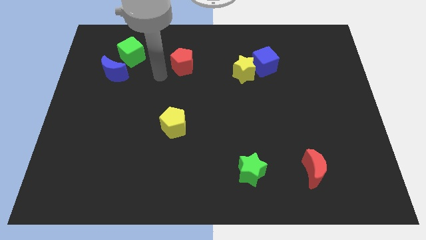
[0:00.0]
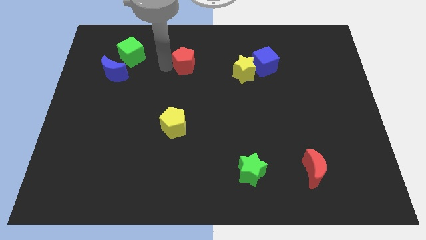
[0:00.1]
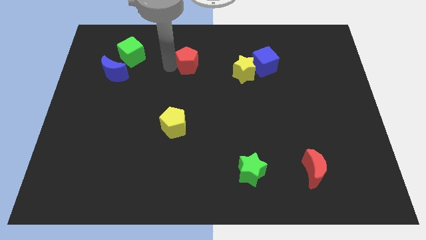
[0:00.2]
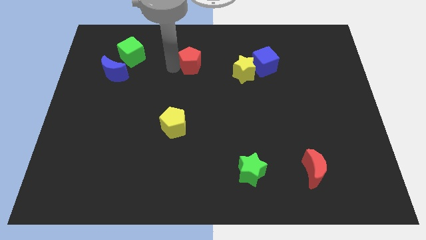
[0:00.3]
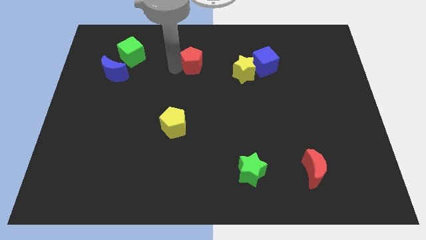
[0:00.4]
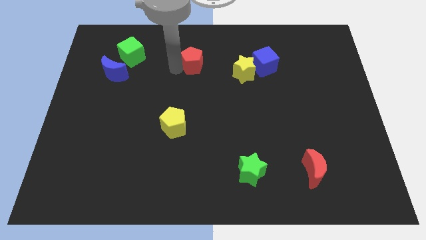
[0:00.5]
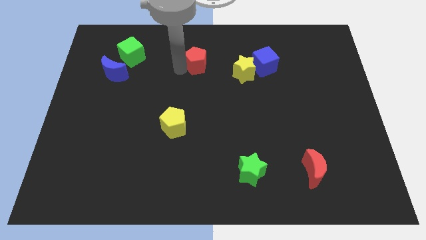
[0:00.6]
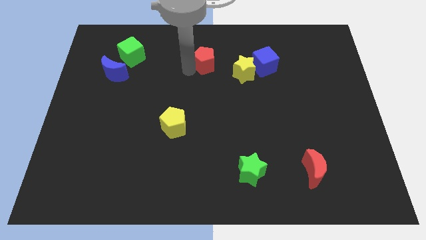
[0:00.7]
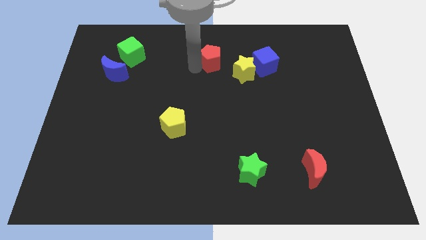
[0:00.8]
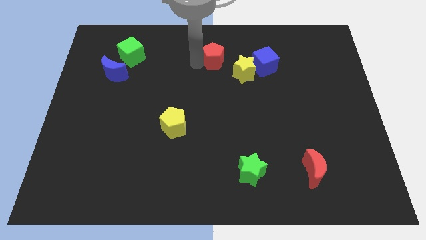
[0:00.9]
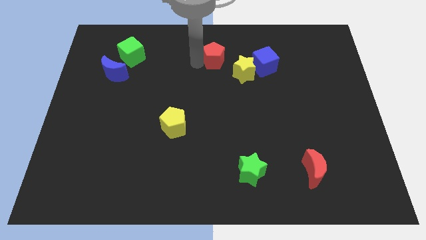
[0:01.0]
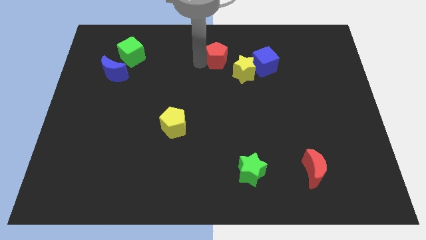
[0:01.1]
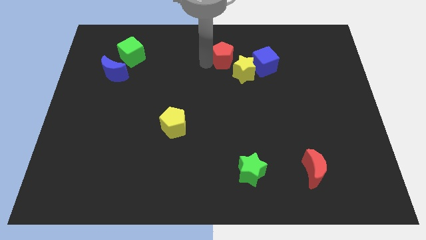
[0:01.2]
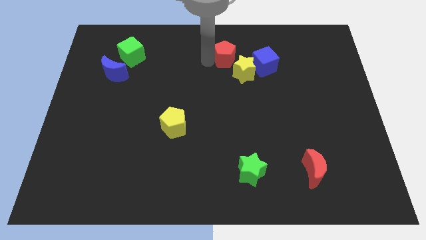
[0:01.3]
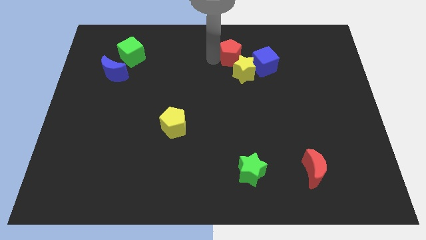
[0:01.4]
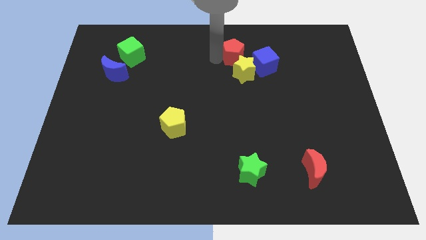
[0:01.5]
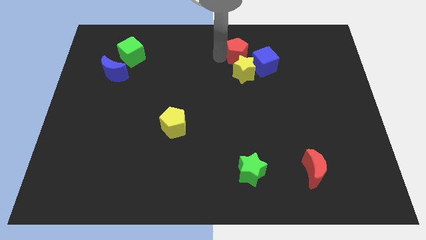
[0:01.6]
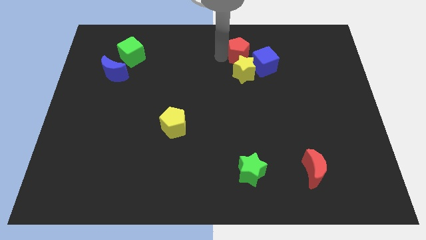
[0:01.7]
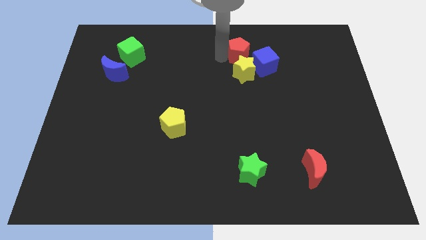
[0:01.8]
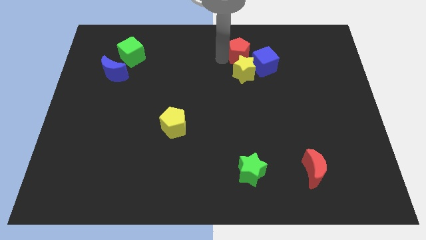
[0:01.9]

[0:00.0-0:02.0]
place the red pentagon on top of the yellow star

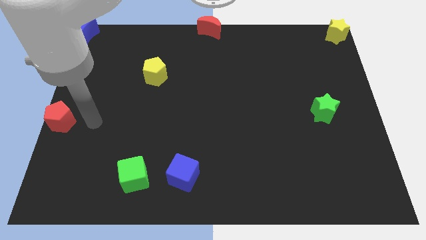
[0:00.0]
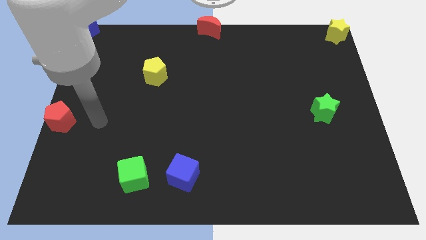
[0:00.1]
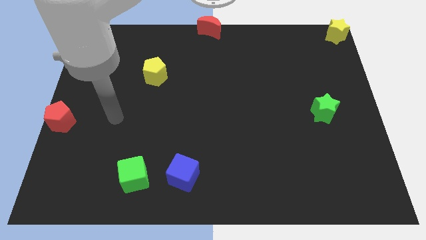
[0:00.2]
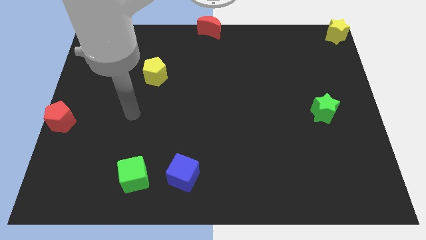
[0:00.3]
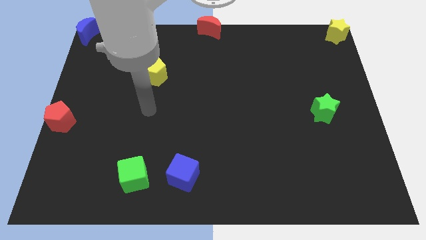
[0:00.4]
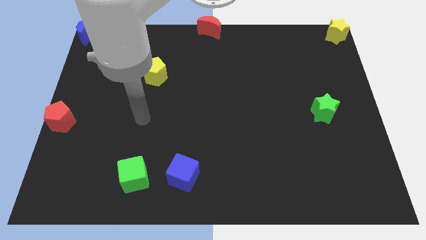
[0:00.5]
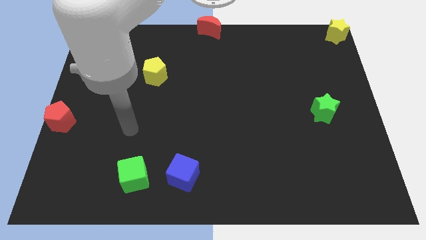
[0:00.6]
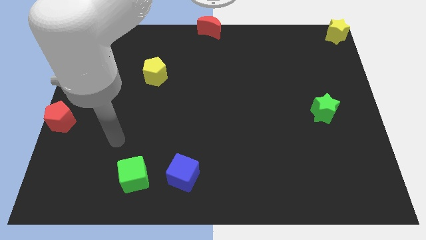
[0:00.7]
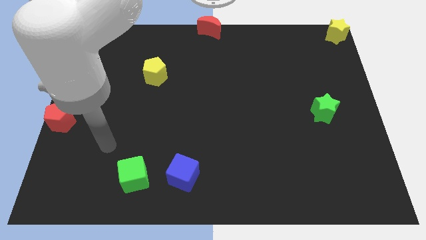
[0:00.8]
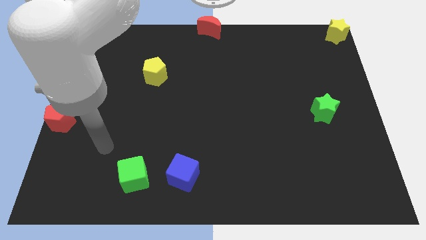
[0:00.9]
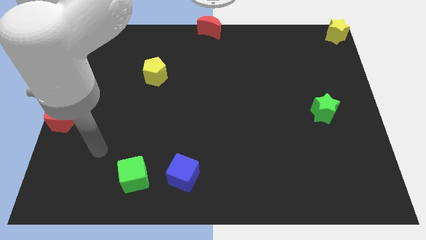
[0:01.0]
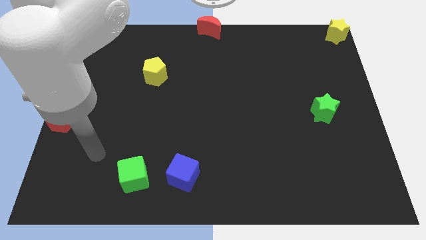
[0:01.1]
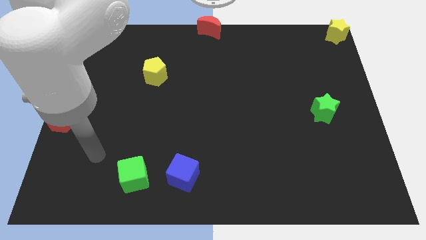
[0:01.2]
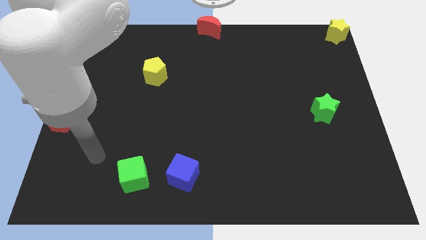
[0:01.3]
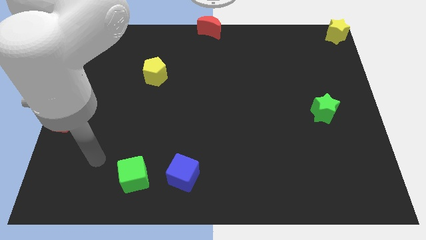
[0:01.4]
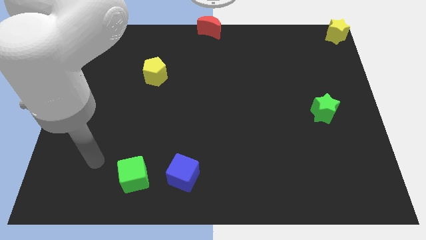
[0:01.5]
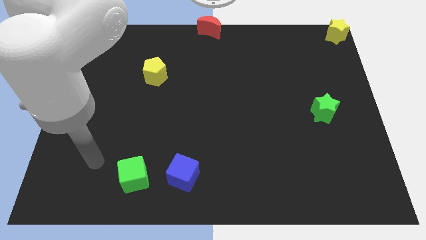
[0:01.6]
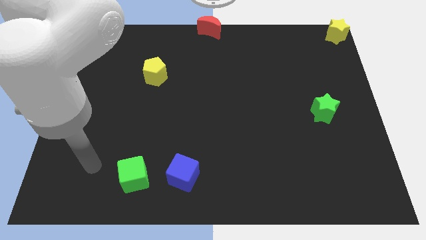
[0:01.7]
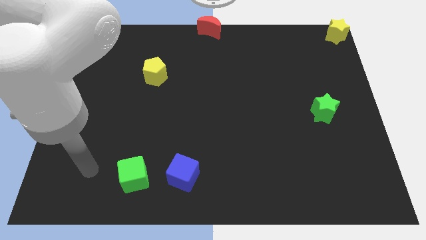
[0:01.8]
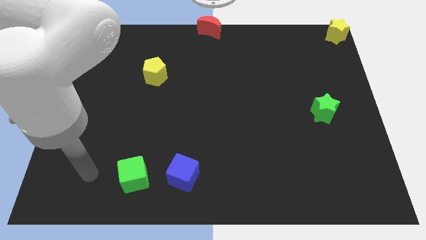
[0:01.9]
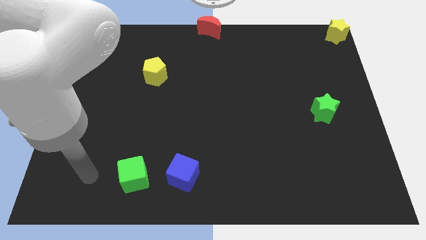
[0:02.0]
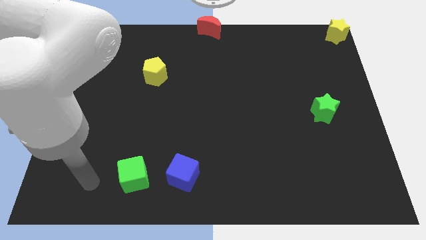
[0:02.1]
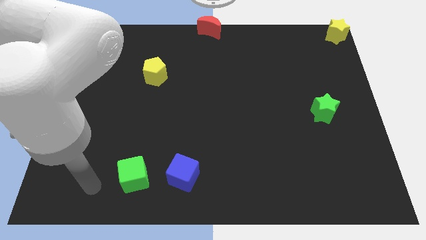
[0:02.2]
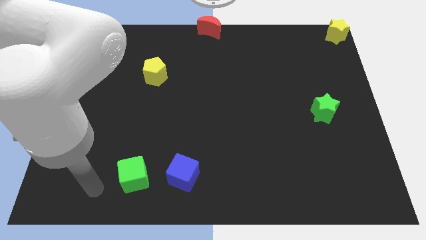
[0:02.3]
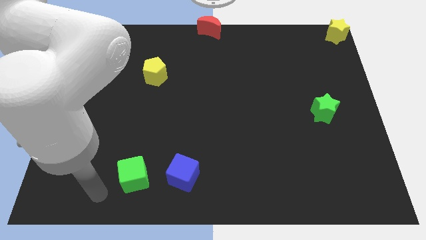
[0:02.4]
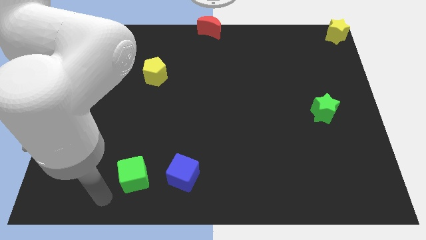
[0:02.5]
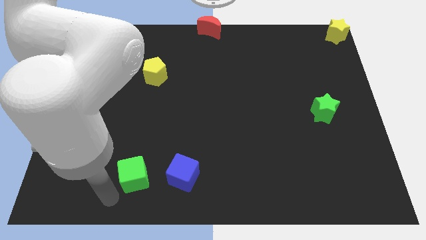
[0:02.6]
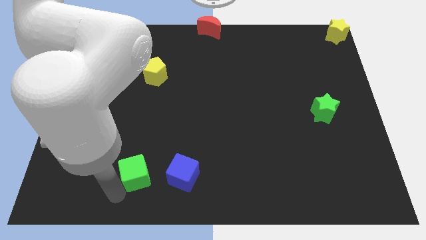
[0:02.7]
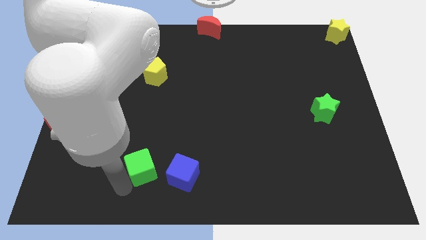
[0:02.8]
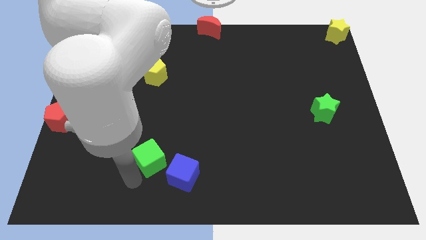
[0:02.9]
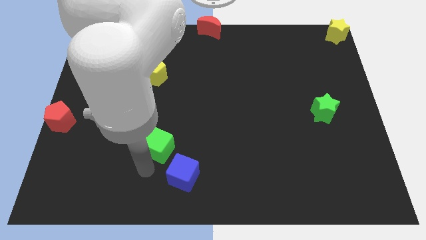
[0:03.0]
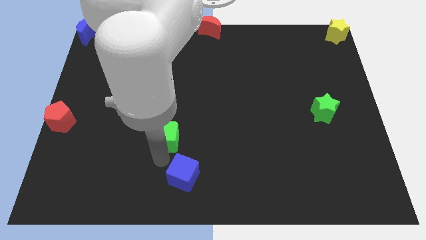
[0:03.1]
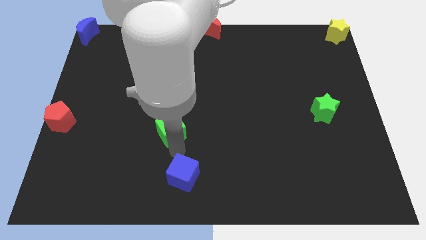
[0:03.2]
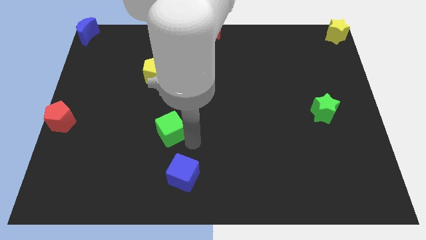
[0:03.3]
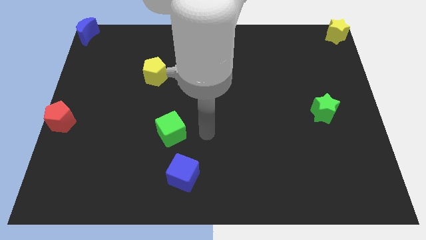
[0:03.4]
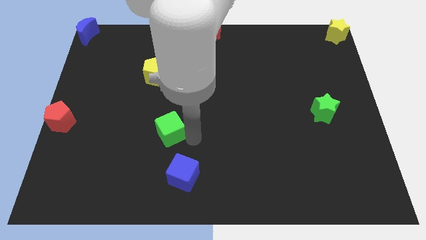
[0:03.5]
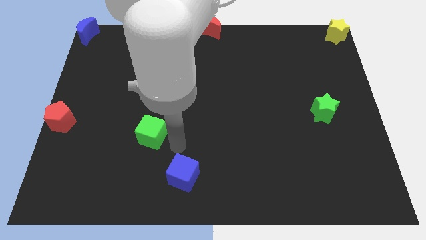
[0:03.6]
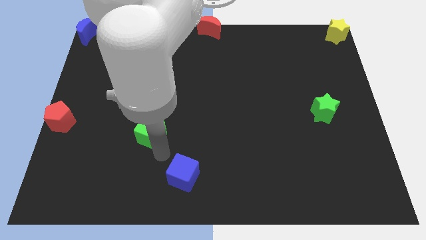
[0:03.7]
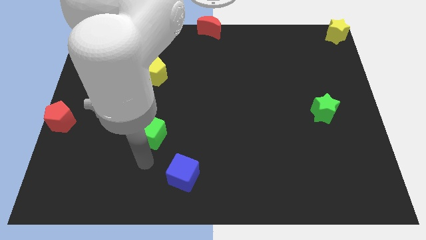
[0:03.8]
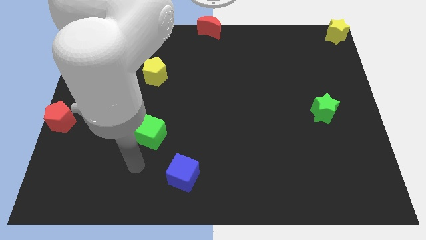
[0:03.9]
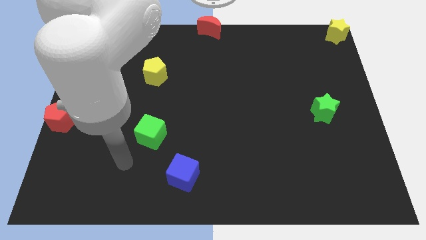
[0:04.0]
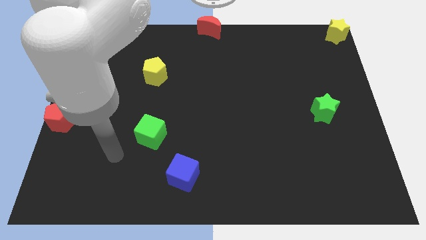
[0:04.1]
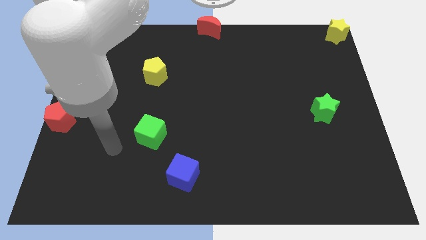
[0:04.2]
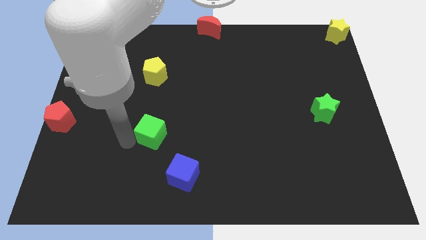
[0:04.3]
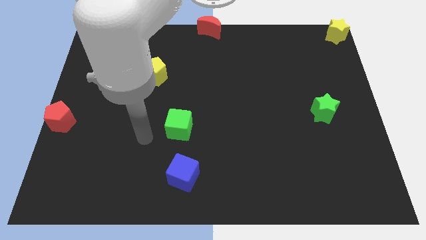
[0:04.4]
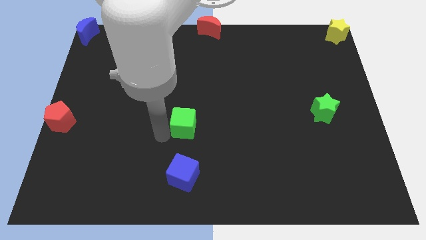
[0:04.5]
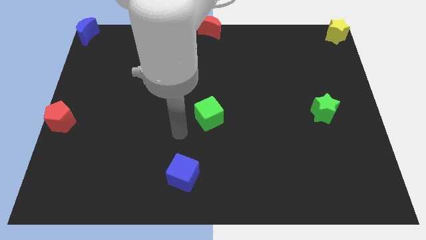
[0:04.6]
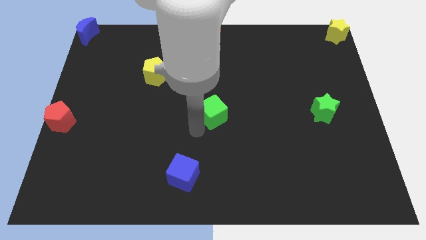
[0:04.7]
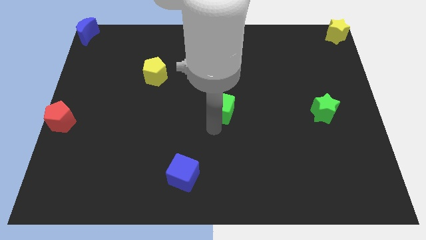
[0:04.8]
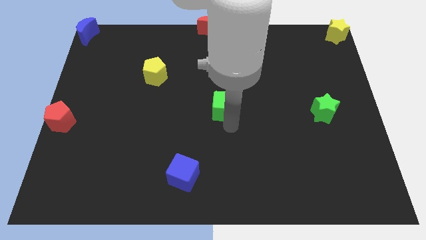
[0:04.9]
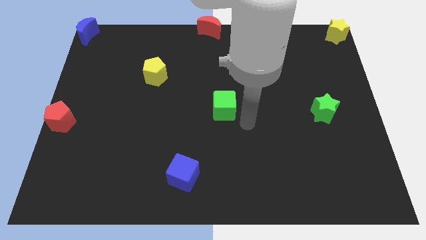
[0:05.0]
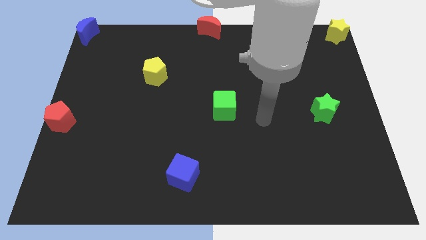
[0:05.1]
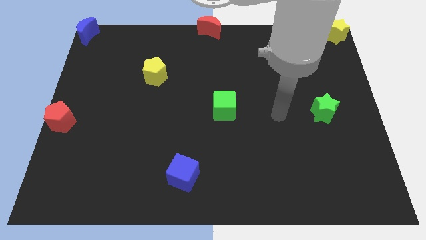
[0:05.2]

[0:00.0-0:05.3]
place the green cube diagonally top right to the blue cube

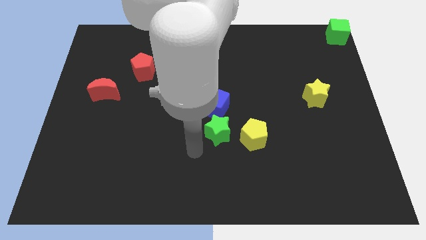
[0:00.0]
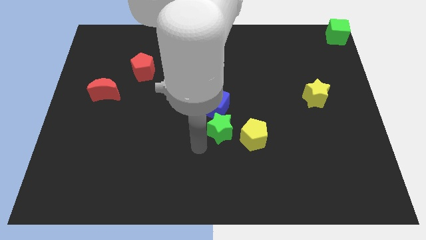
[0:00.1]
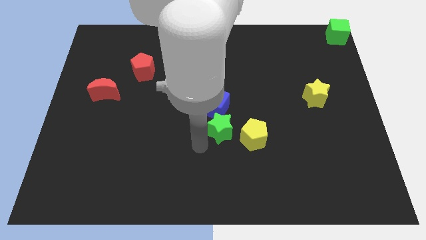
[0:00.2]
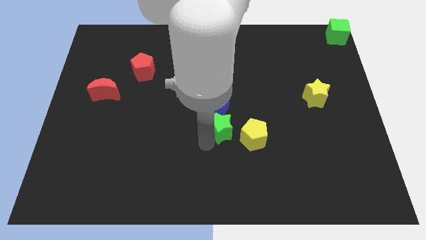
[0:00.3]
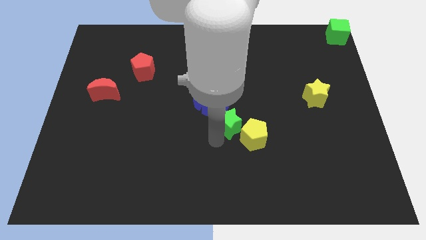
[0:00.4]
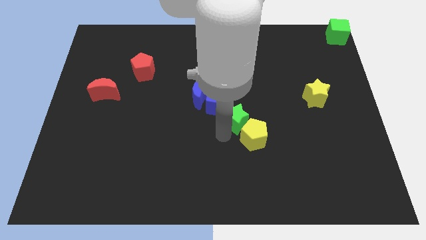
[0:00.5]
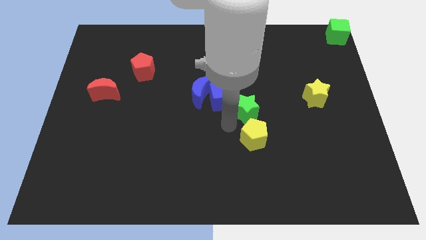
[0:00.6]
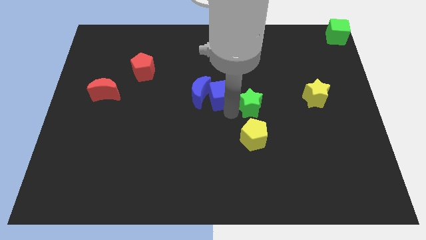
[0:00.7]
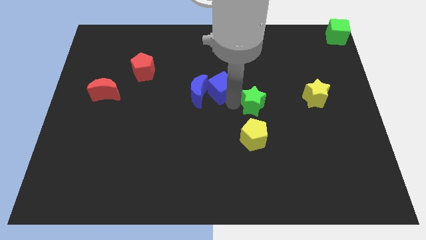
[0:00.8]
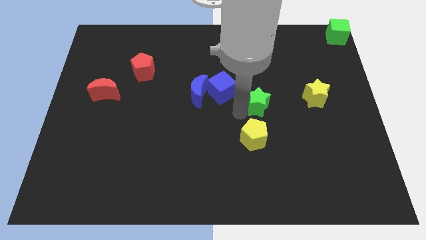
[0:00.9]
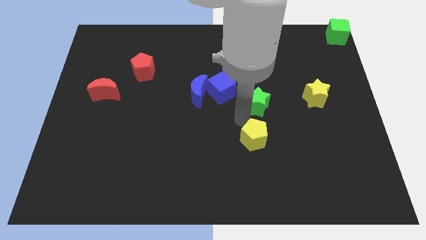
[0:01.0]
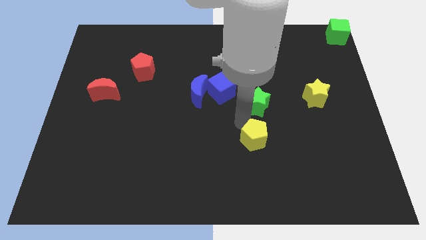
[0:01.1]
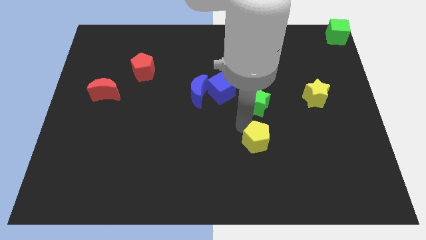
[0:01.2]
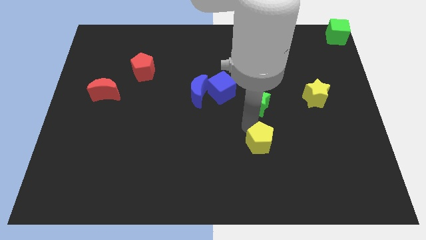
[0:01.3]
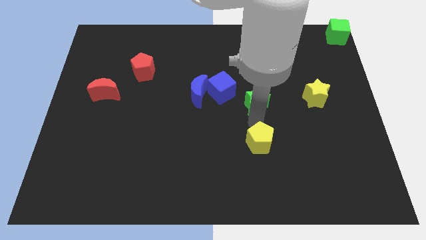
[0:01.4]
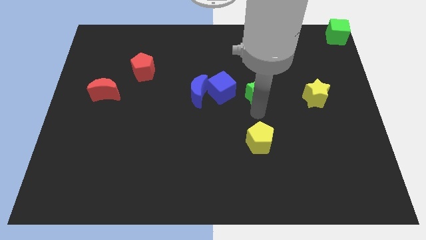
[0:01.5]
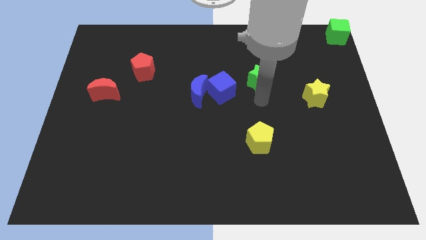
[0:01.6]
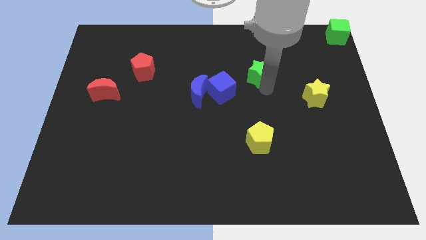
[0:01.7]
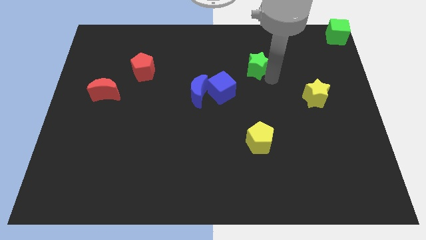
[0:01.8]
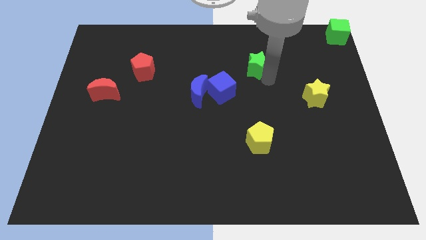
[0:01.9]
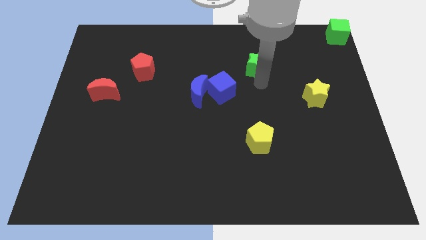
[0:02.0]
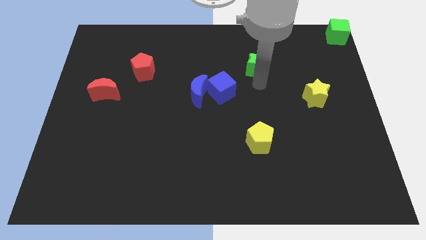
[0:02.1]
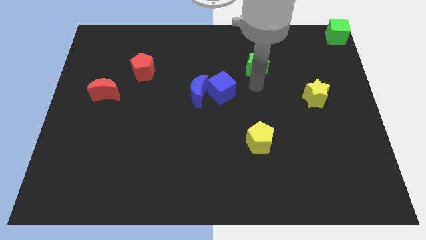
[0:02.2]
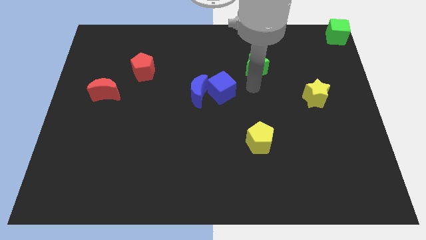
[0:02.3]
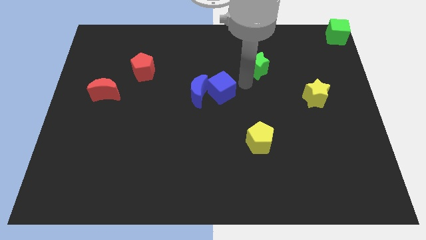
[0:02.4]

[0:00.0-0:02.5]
take the green star towards the green cube
